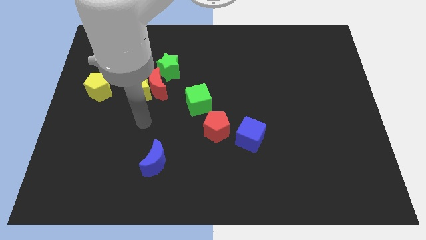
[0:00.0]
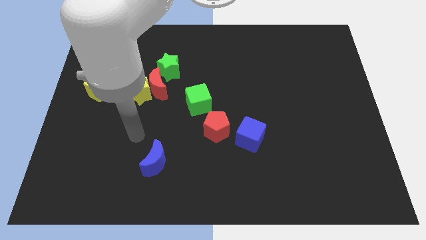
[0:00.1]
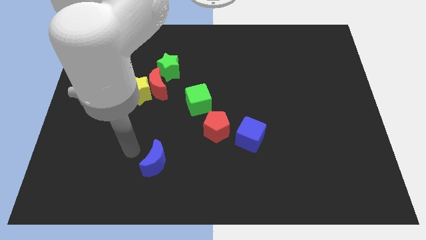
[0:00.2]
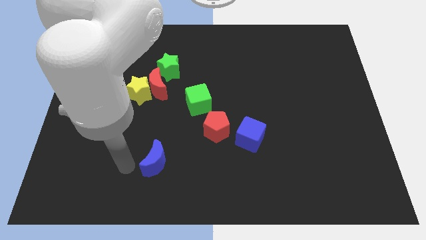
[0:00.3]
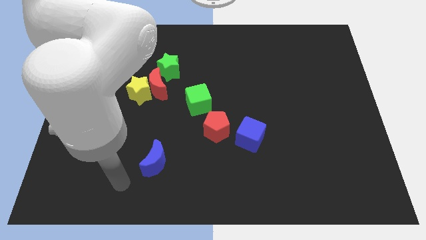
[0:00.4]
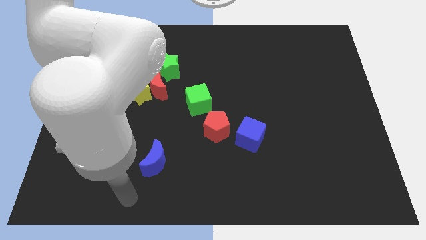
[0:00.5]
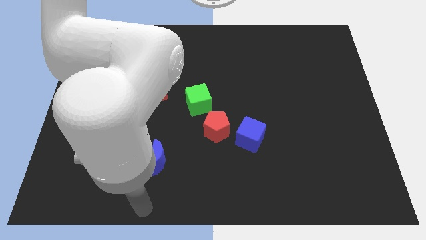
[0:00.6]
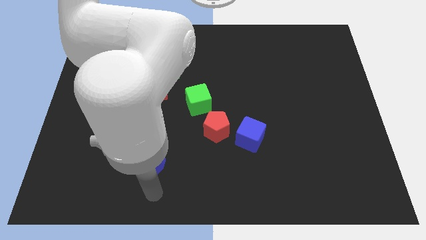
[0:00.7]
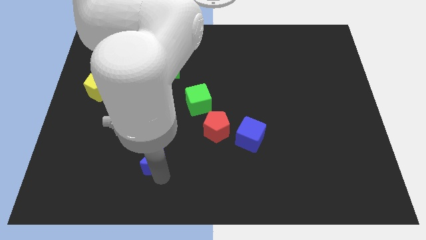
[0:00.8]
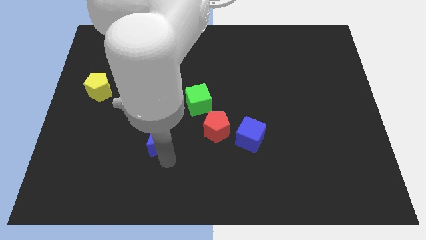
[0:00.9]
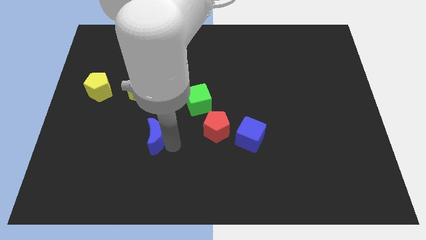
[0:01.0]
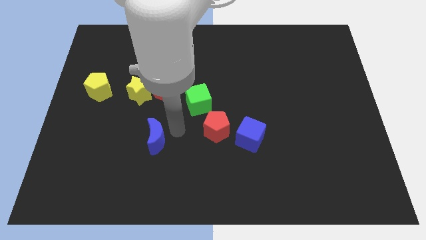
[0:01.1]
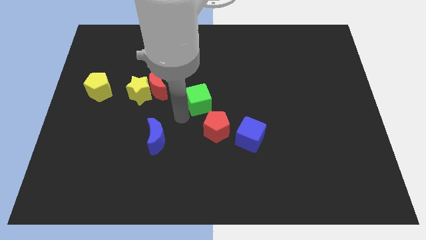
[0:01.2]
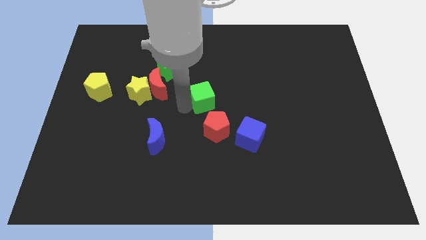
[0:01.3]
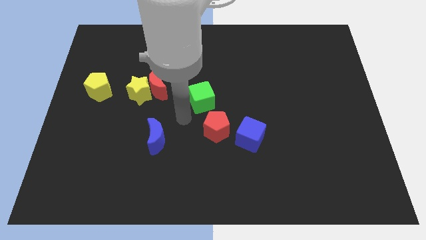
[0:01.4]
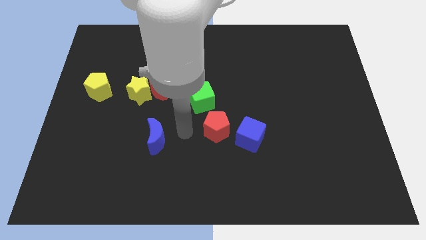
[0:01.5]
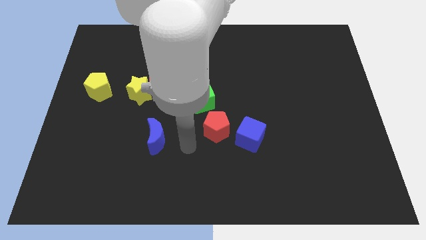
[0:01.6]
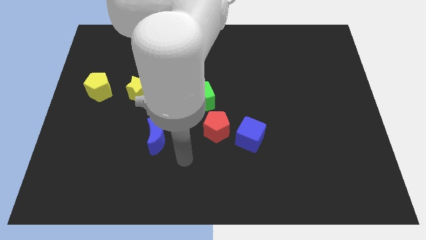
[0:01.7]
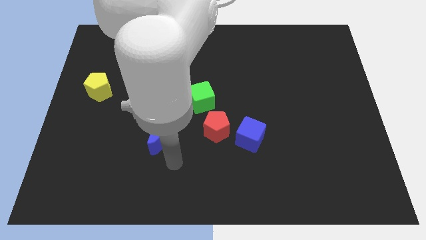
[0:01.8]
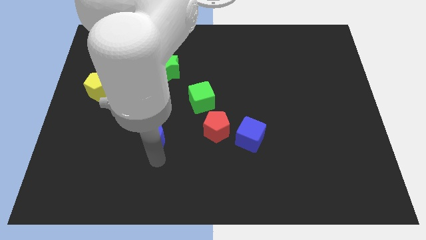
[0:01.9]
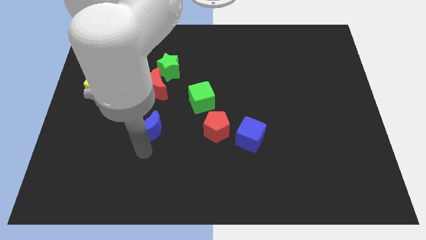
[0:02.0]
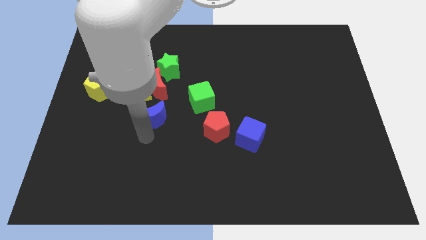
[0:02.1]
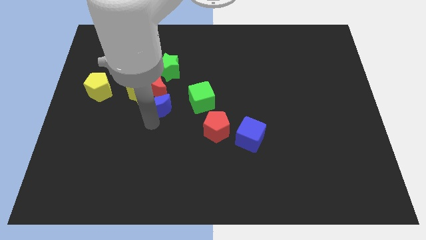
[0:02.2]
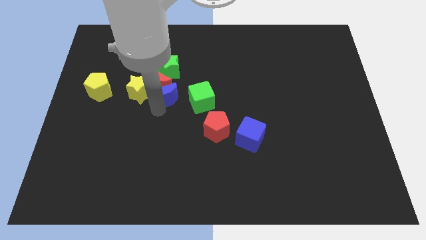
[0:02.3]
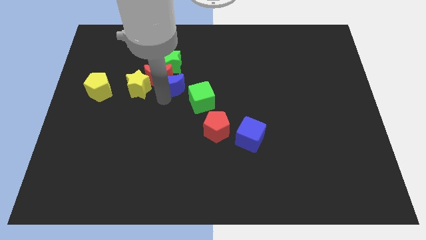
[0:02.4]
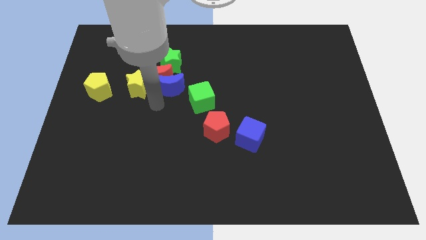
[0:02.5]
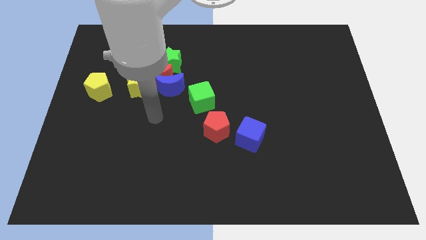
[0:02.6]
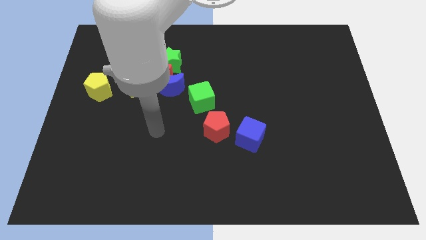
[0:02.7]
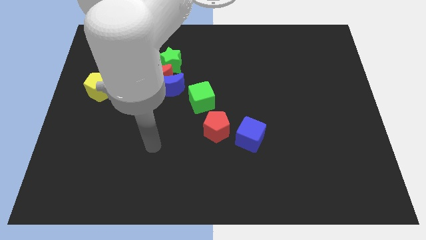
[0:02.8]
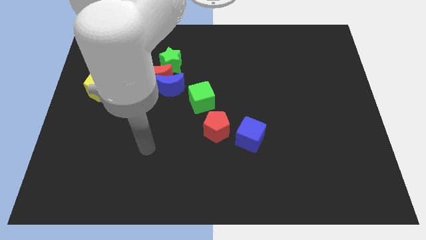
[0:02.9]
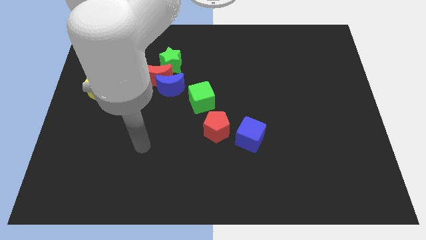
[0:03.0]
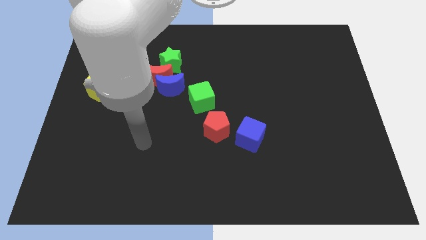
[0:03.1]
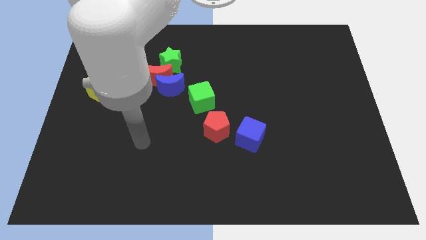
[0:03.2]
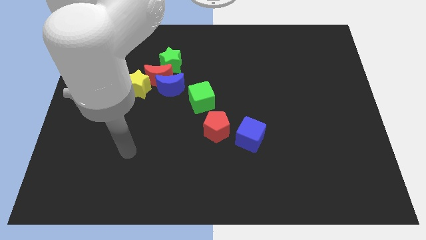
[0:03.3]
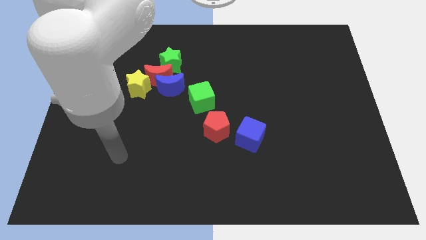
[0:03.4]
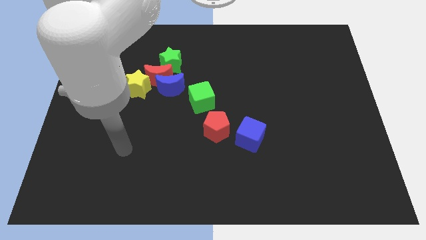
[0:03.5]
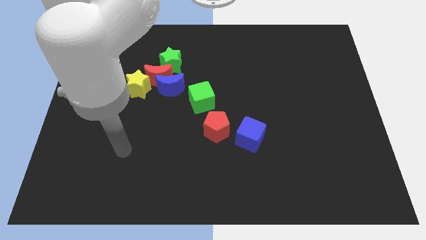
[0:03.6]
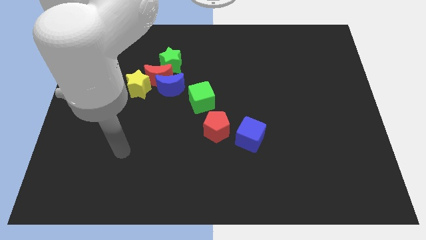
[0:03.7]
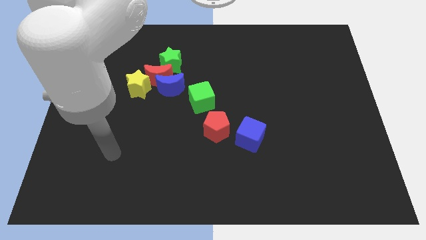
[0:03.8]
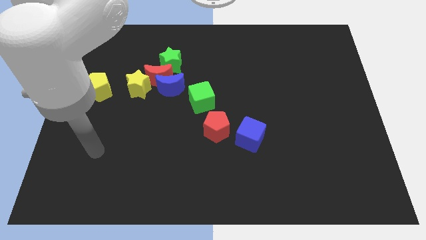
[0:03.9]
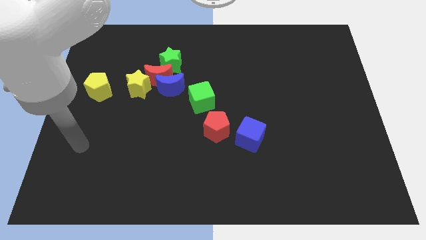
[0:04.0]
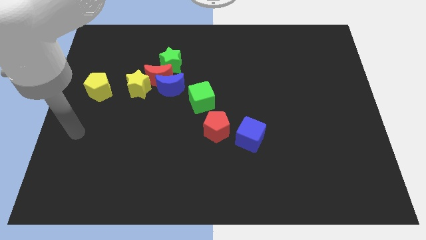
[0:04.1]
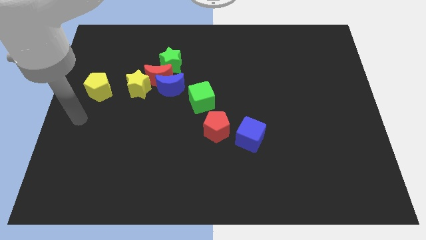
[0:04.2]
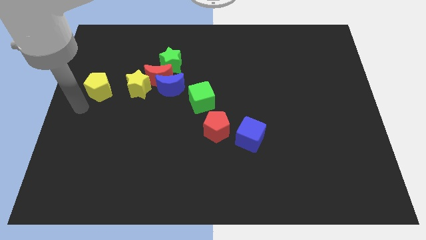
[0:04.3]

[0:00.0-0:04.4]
push the blue moon into red moon

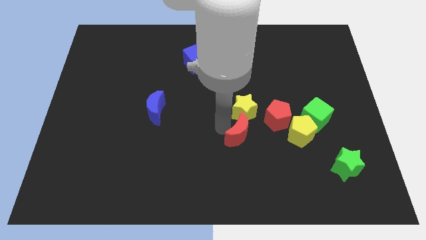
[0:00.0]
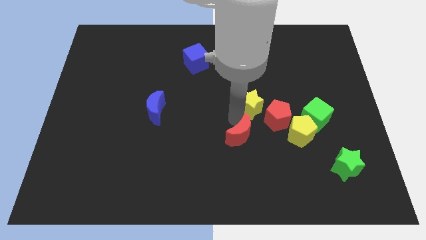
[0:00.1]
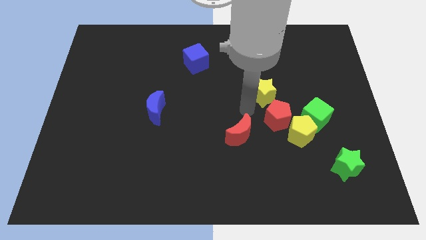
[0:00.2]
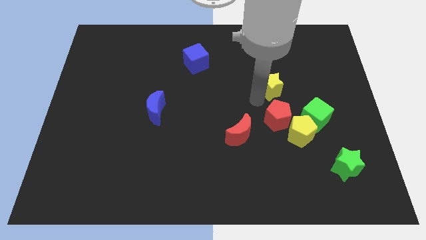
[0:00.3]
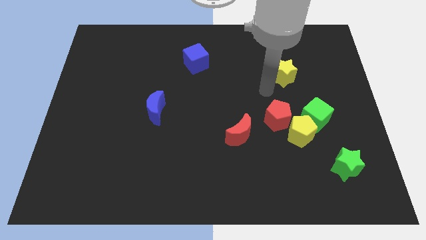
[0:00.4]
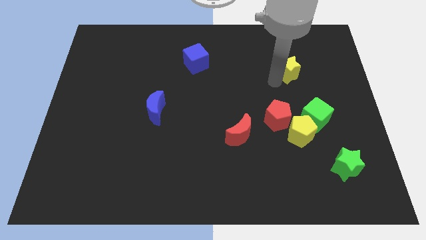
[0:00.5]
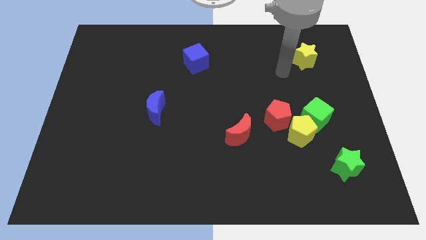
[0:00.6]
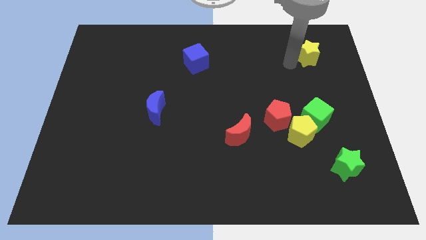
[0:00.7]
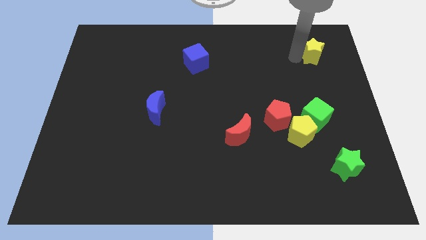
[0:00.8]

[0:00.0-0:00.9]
place the yellow star above the green cube

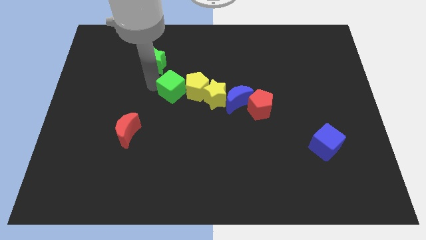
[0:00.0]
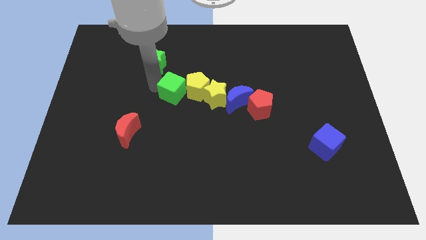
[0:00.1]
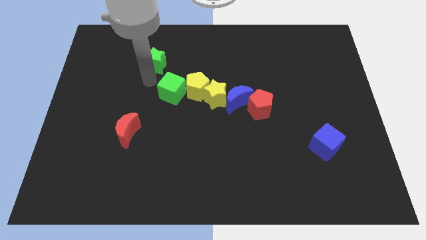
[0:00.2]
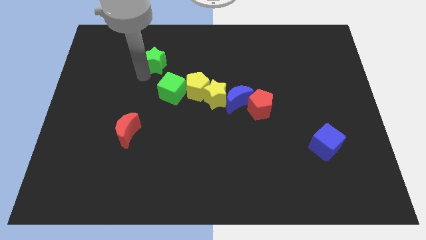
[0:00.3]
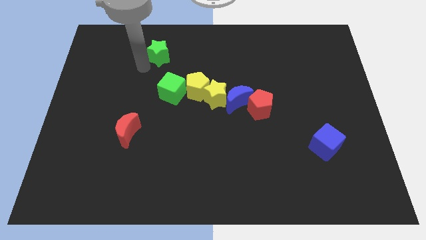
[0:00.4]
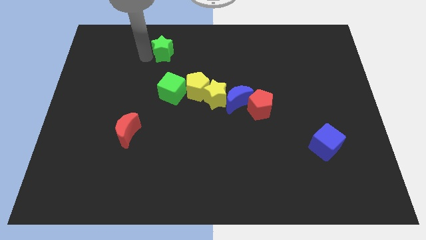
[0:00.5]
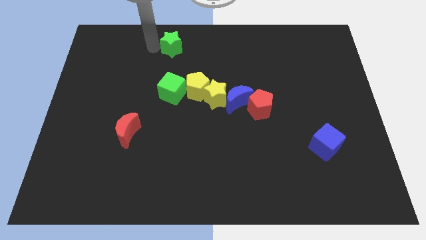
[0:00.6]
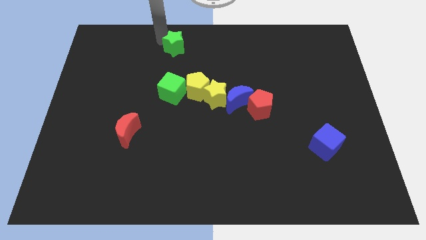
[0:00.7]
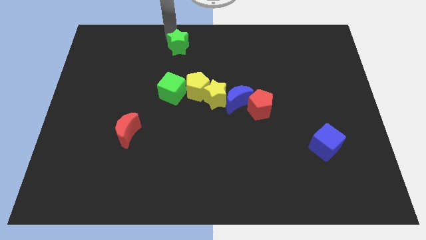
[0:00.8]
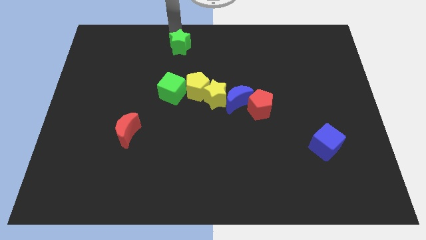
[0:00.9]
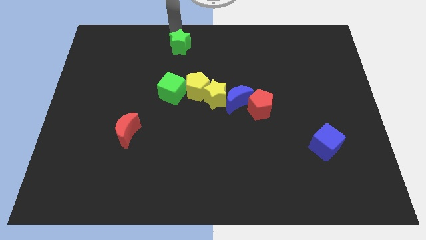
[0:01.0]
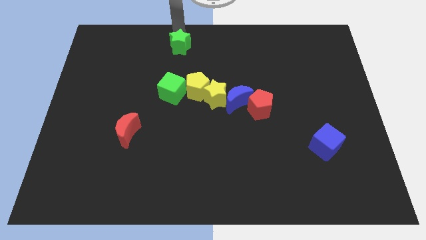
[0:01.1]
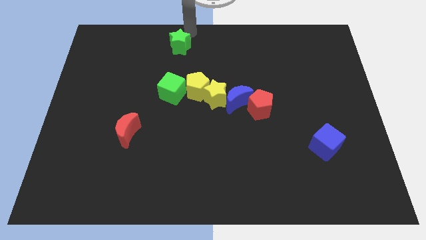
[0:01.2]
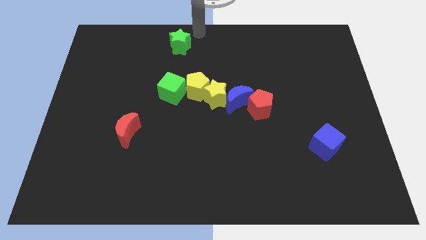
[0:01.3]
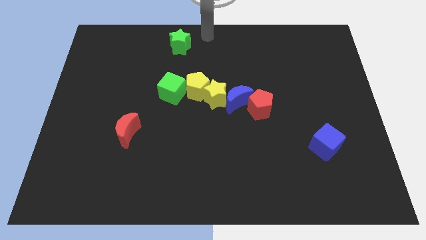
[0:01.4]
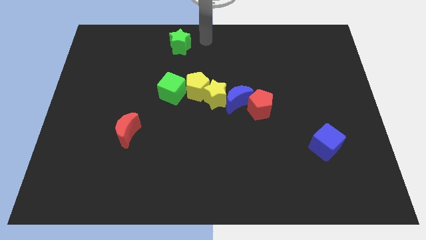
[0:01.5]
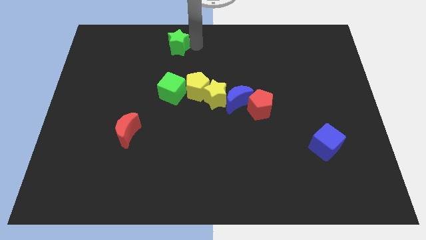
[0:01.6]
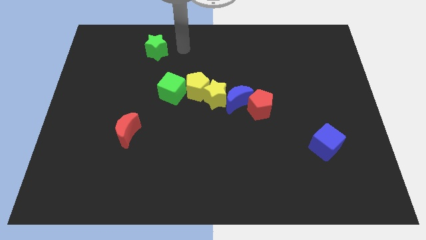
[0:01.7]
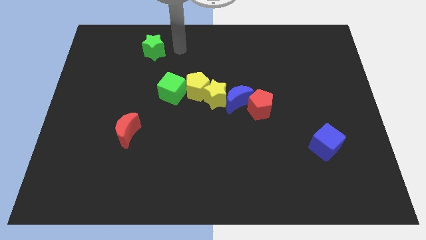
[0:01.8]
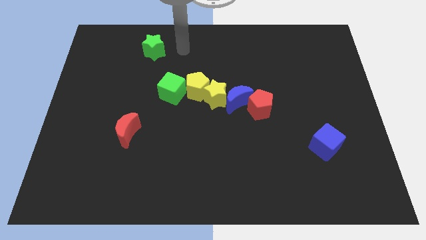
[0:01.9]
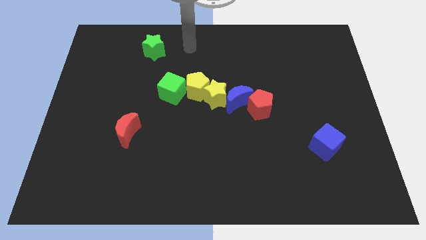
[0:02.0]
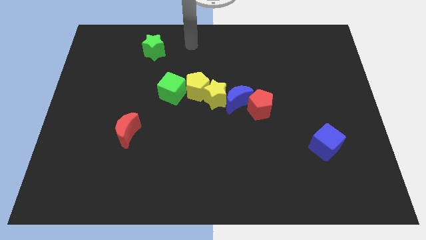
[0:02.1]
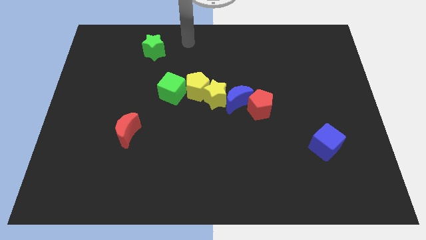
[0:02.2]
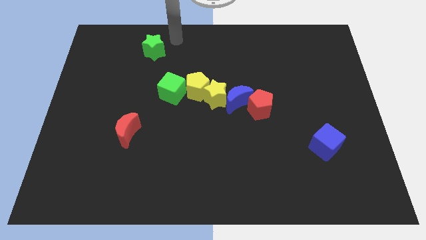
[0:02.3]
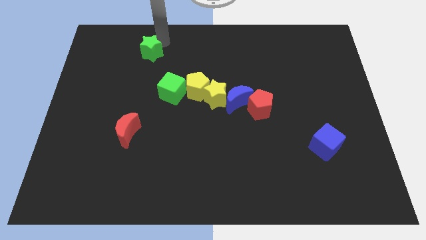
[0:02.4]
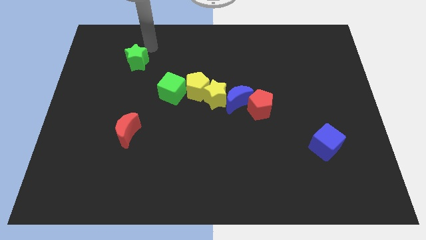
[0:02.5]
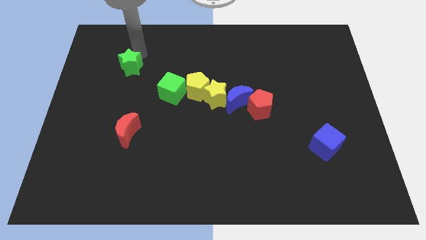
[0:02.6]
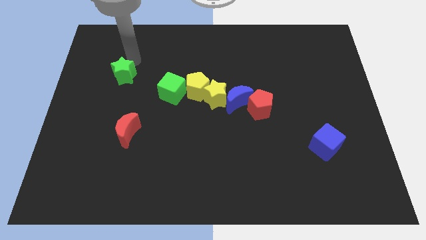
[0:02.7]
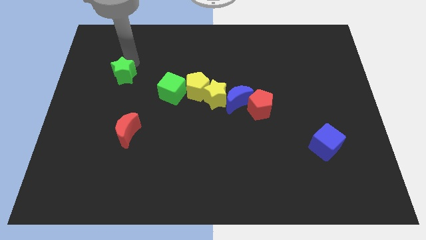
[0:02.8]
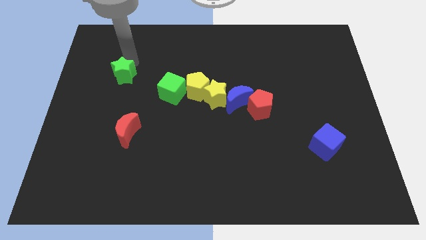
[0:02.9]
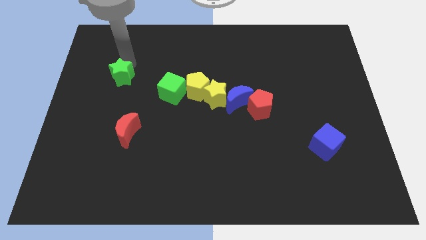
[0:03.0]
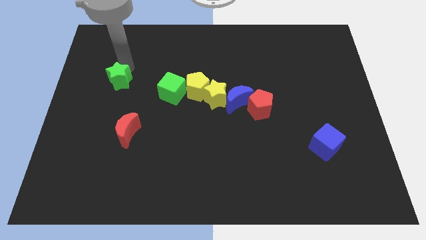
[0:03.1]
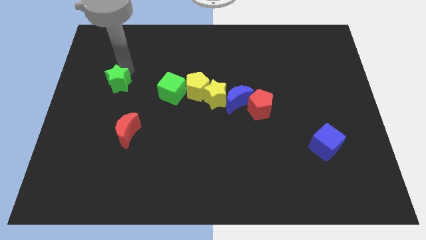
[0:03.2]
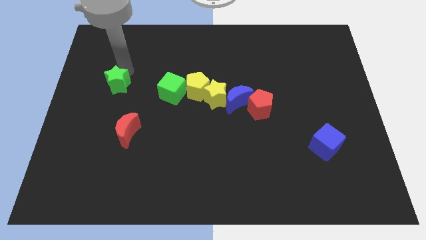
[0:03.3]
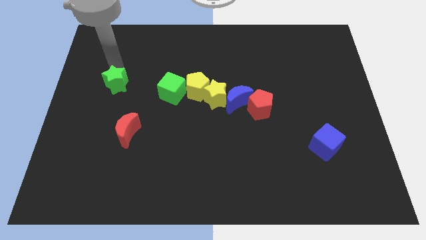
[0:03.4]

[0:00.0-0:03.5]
bring the green star at the left side of the green cube
